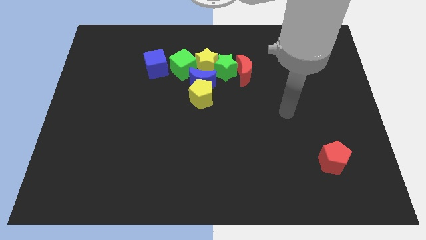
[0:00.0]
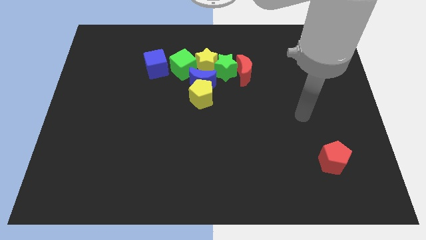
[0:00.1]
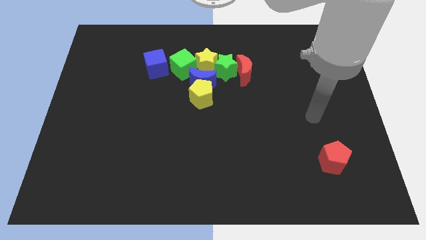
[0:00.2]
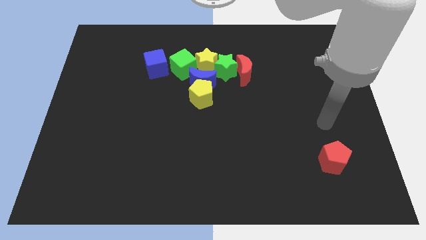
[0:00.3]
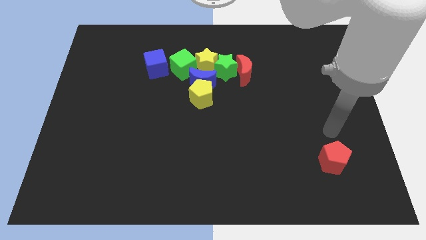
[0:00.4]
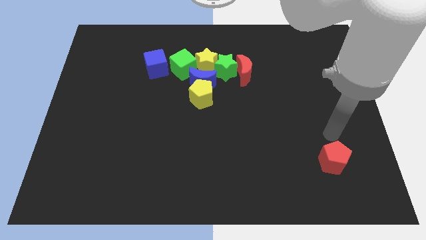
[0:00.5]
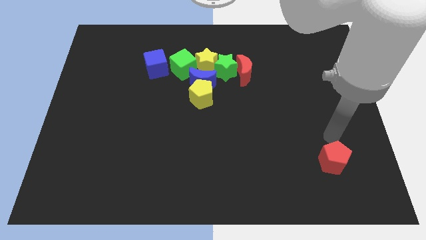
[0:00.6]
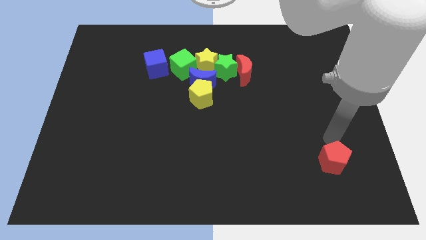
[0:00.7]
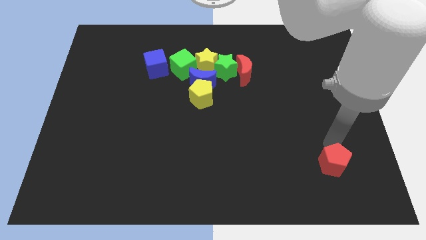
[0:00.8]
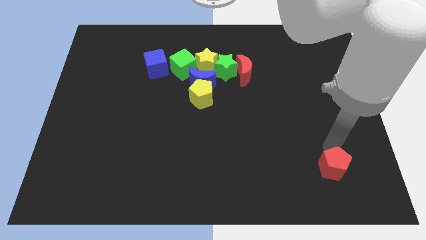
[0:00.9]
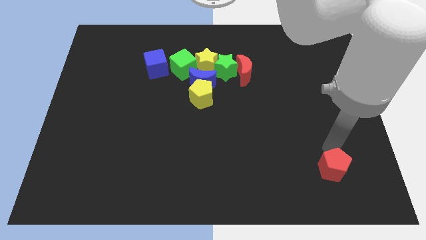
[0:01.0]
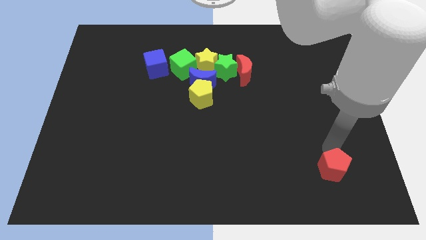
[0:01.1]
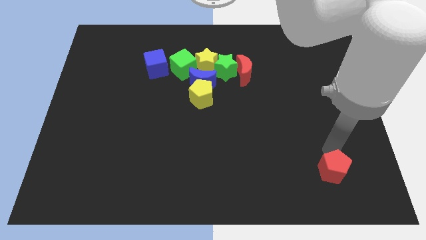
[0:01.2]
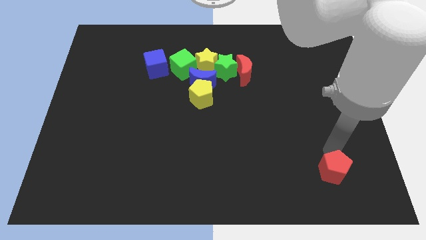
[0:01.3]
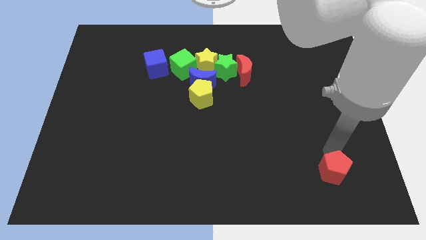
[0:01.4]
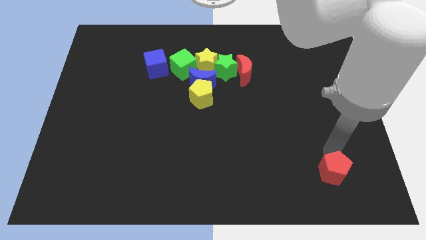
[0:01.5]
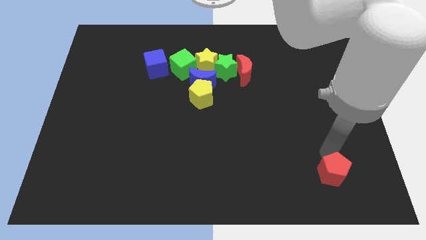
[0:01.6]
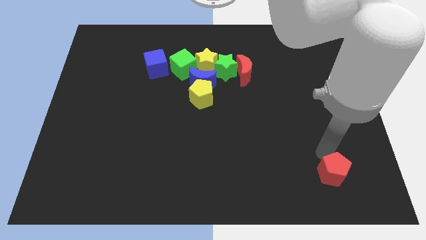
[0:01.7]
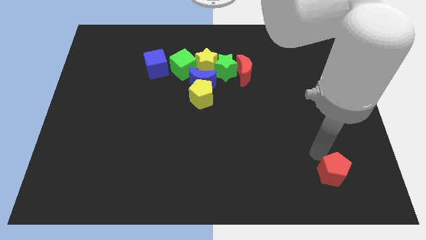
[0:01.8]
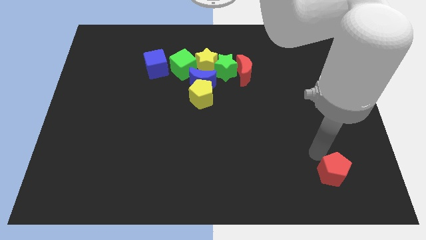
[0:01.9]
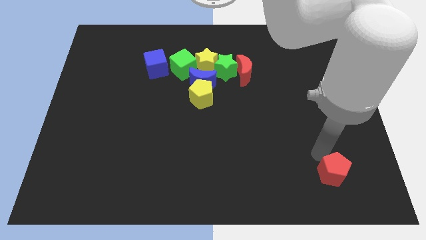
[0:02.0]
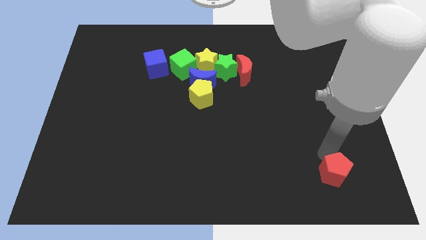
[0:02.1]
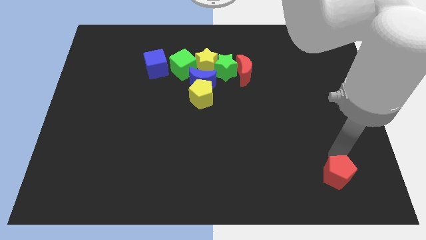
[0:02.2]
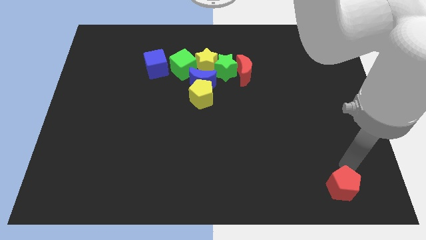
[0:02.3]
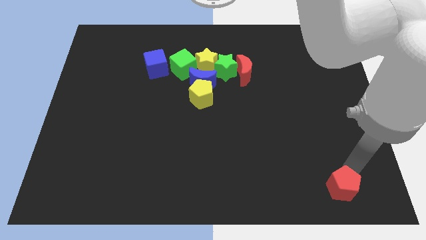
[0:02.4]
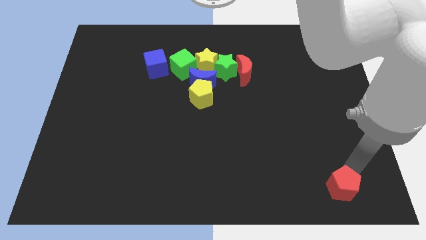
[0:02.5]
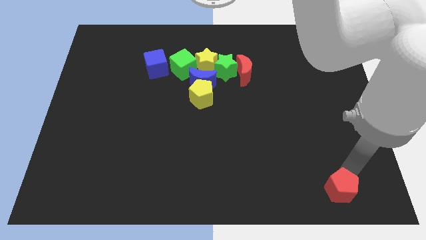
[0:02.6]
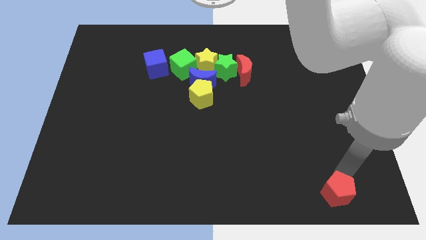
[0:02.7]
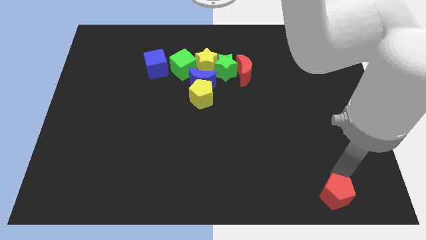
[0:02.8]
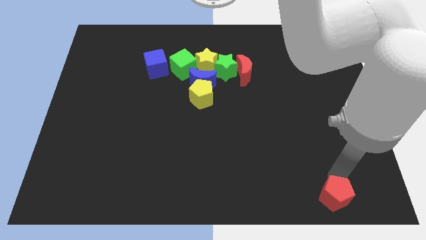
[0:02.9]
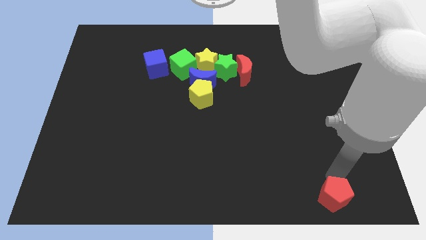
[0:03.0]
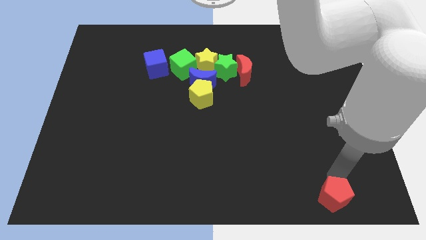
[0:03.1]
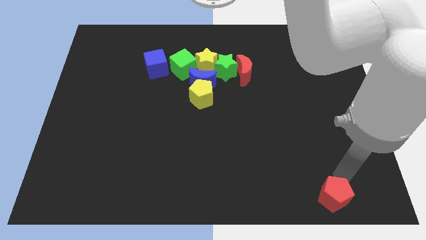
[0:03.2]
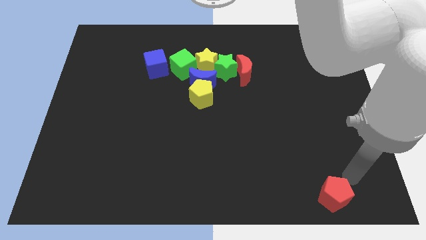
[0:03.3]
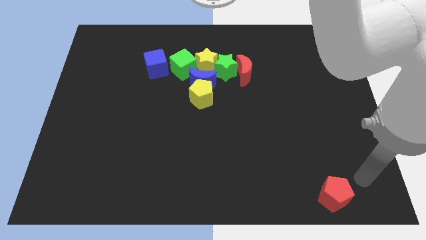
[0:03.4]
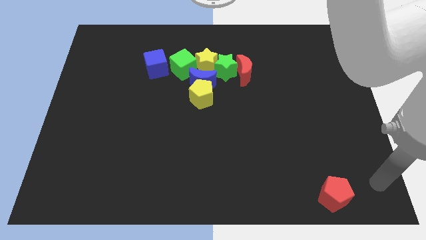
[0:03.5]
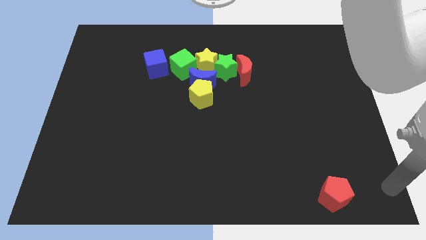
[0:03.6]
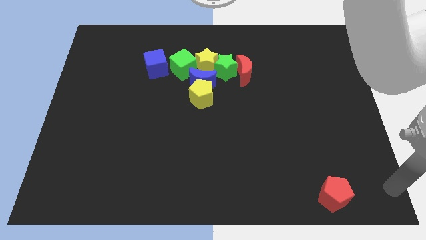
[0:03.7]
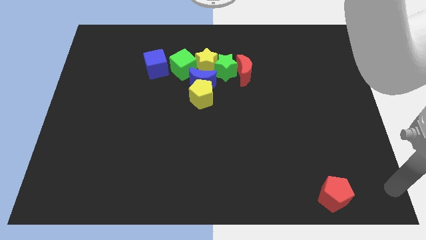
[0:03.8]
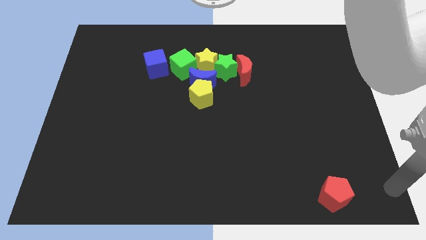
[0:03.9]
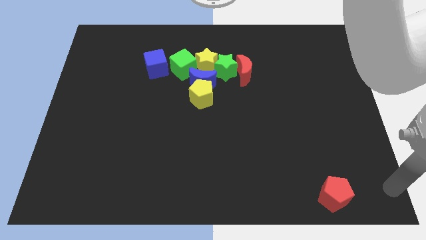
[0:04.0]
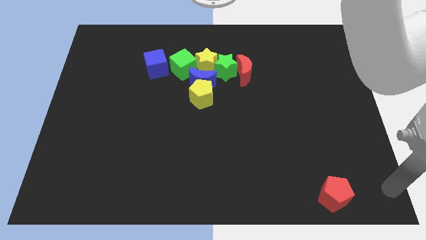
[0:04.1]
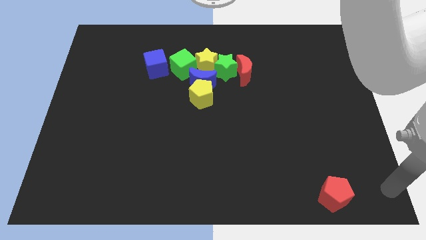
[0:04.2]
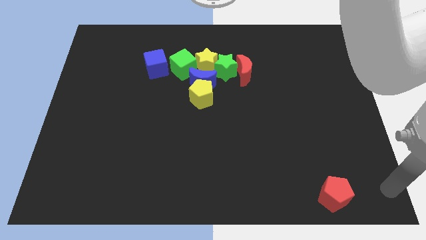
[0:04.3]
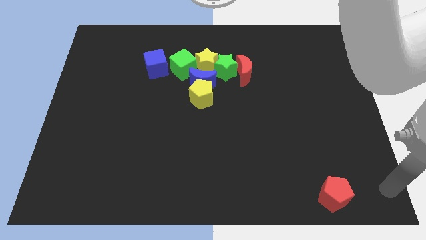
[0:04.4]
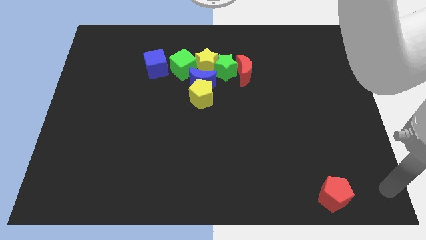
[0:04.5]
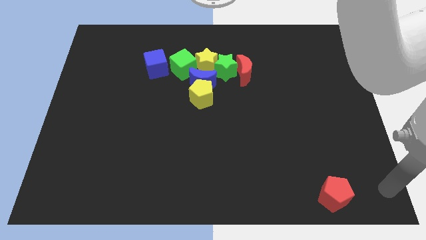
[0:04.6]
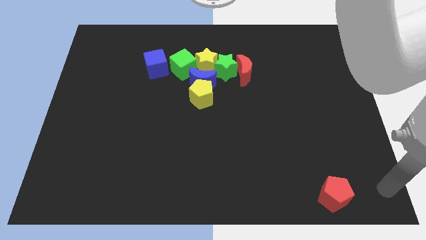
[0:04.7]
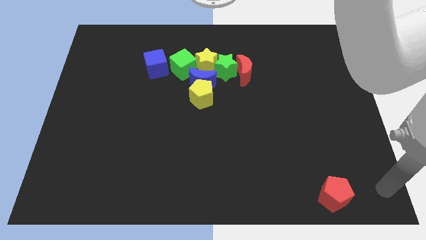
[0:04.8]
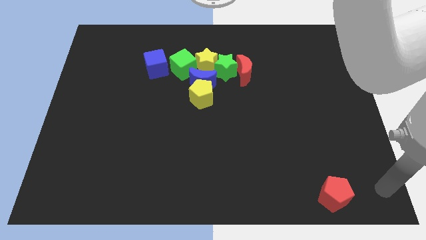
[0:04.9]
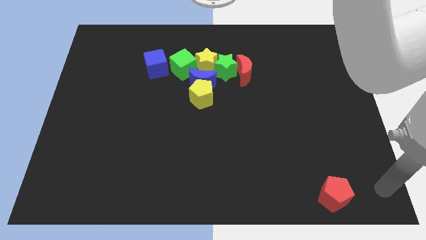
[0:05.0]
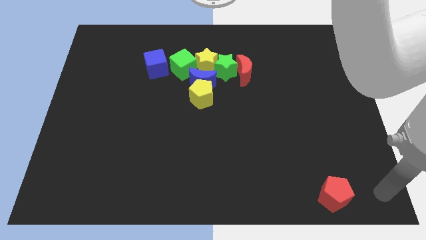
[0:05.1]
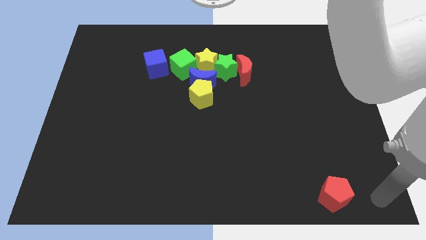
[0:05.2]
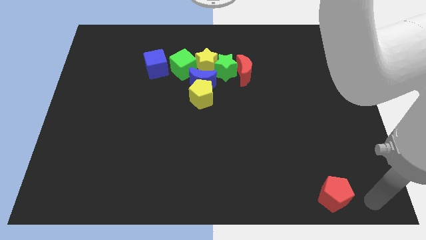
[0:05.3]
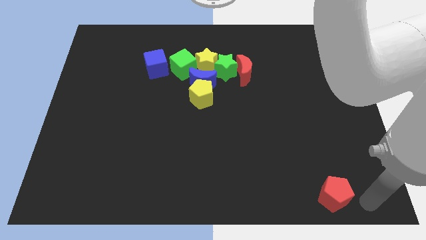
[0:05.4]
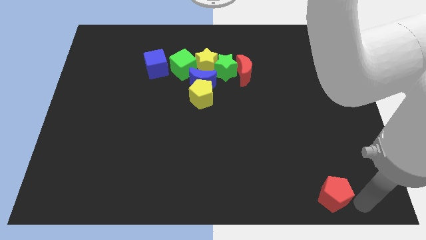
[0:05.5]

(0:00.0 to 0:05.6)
push the red pentagon to the bottom side of the board

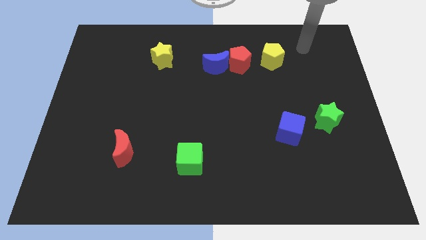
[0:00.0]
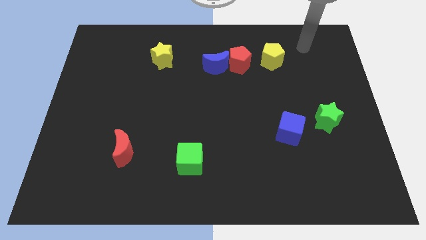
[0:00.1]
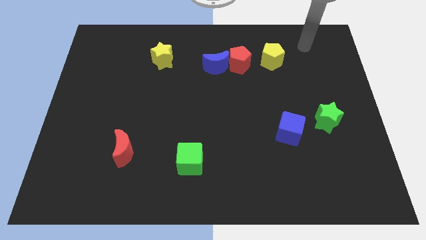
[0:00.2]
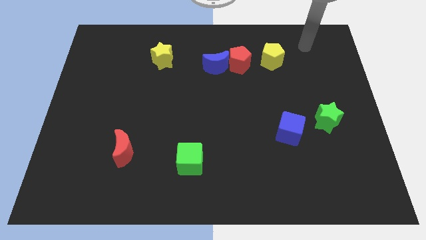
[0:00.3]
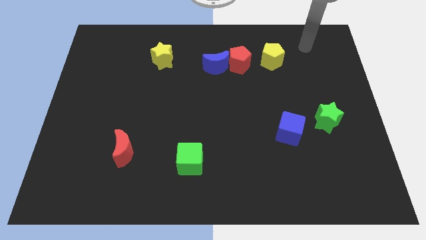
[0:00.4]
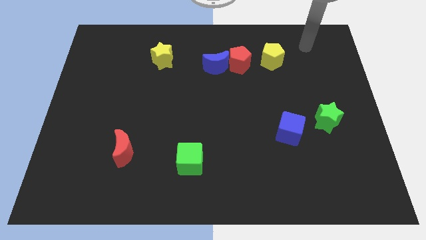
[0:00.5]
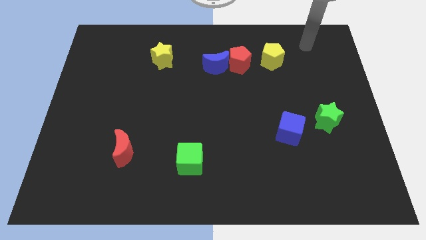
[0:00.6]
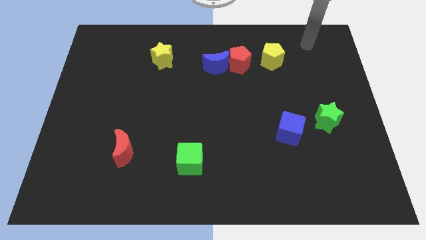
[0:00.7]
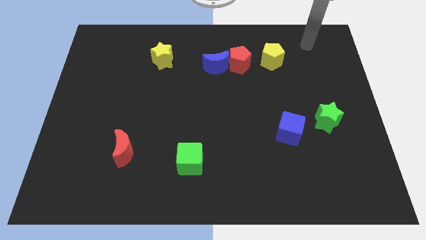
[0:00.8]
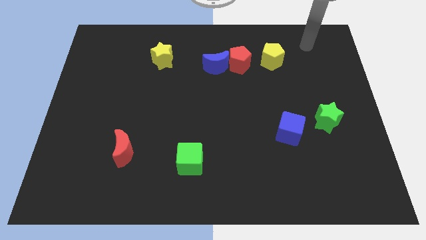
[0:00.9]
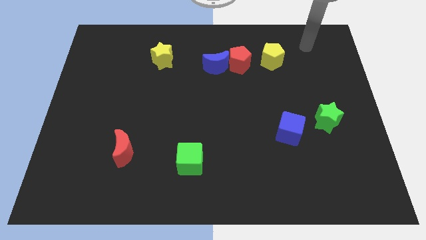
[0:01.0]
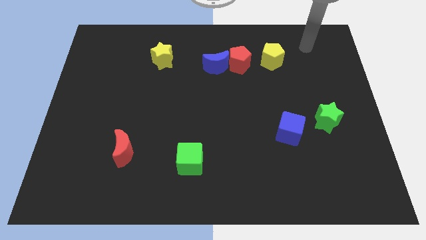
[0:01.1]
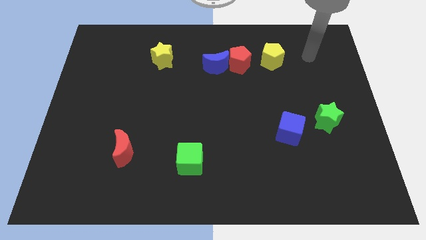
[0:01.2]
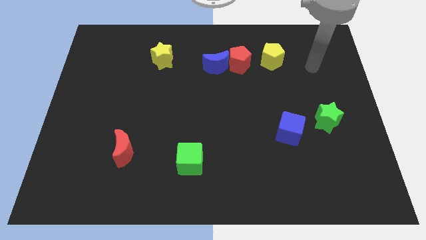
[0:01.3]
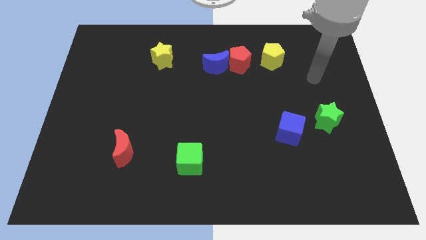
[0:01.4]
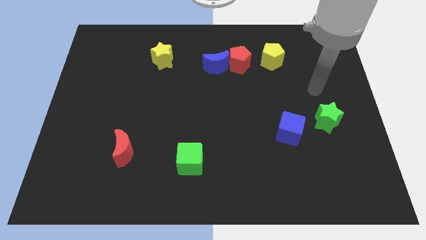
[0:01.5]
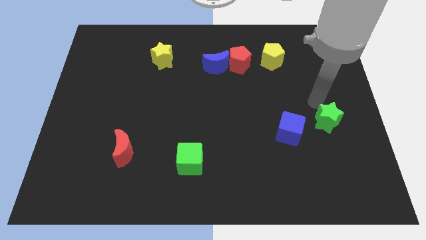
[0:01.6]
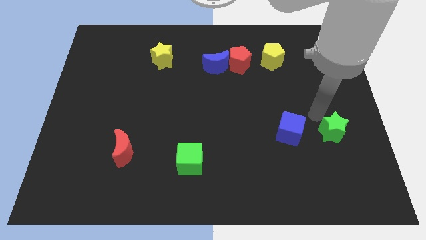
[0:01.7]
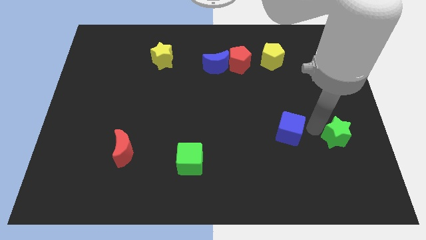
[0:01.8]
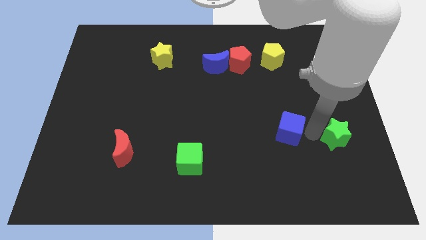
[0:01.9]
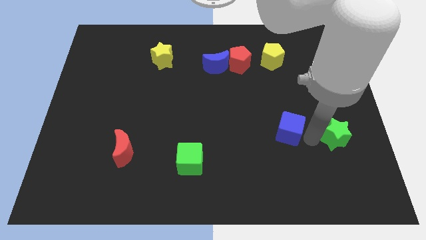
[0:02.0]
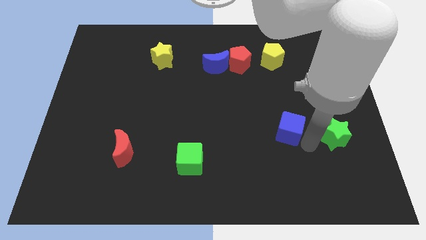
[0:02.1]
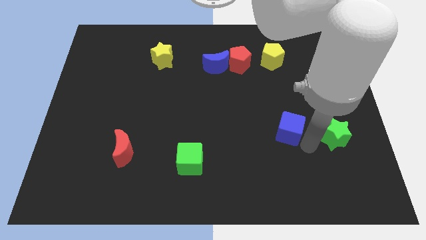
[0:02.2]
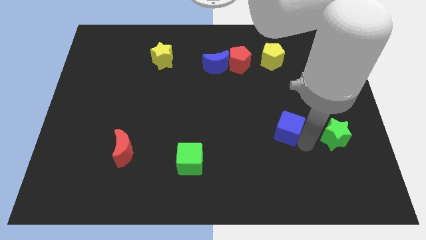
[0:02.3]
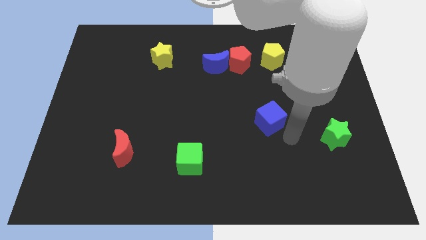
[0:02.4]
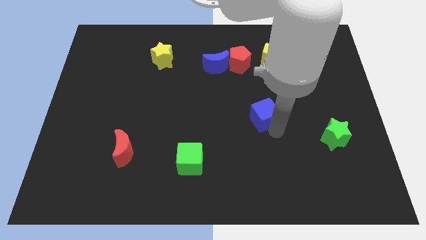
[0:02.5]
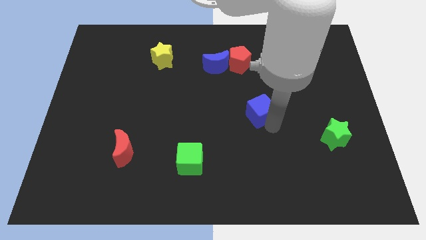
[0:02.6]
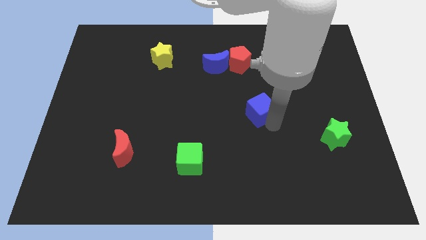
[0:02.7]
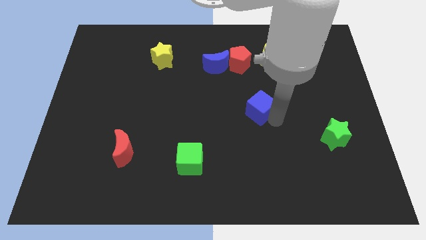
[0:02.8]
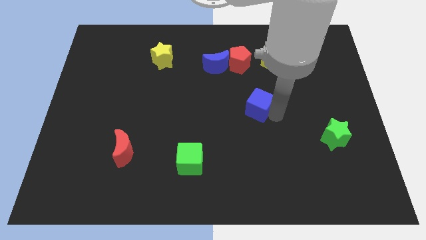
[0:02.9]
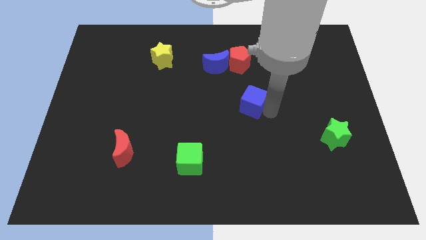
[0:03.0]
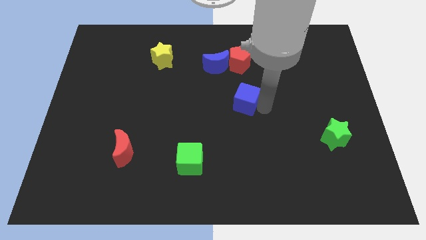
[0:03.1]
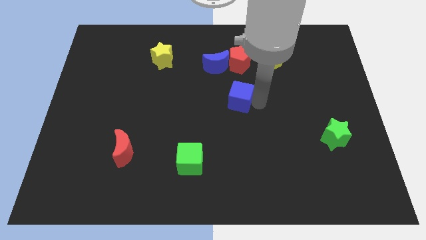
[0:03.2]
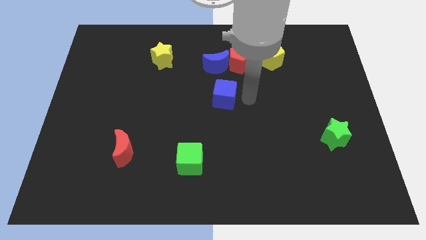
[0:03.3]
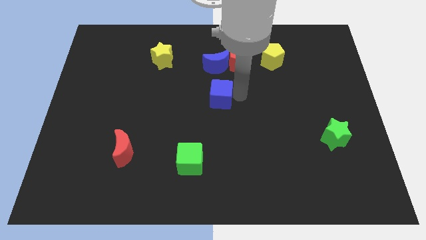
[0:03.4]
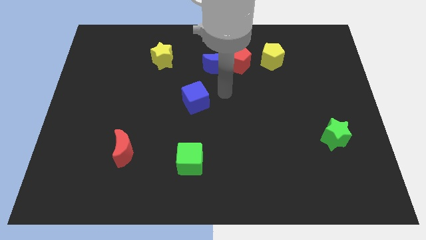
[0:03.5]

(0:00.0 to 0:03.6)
move green star and blue block apart
